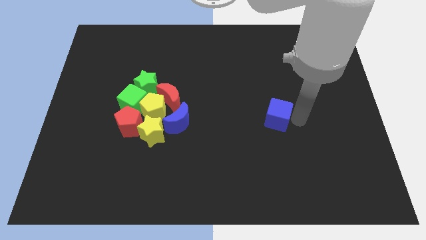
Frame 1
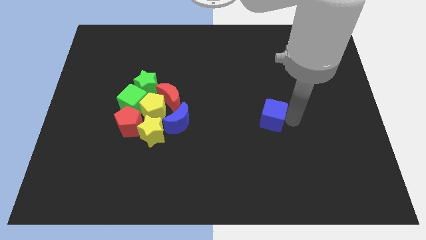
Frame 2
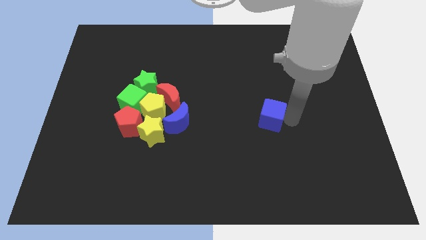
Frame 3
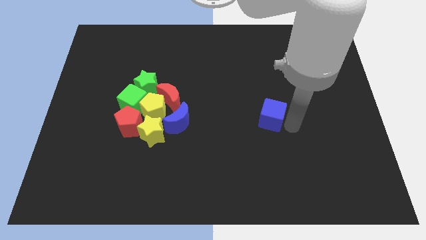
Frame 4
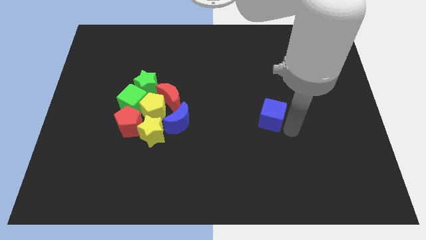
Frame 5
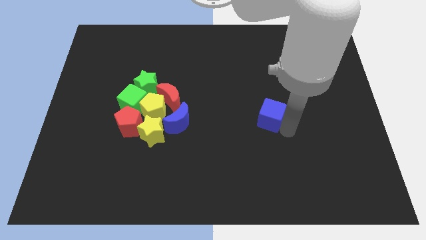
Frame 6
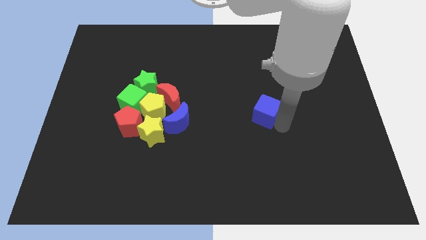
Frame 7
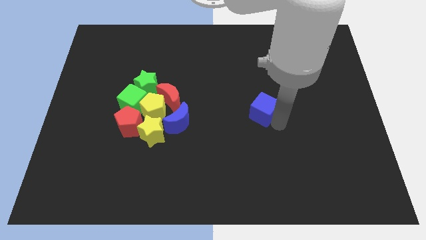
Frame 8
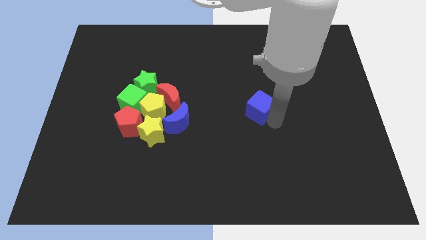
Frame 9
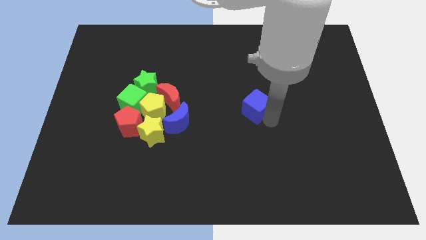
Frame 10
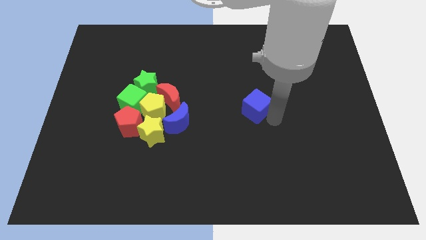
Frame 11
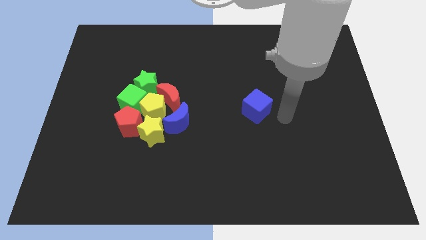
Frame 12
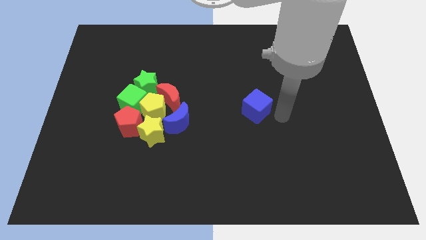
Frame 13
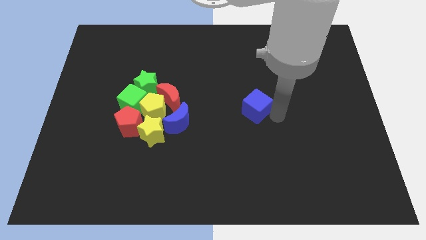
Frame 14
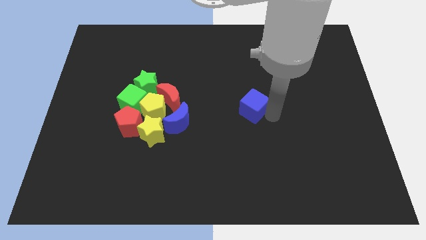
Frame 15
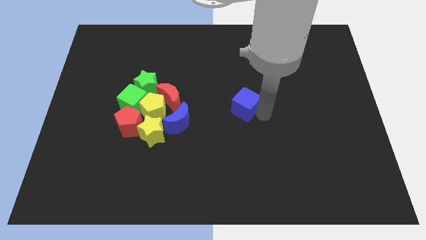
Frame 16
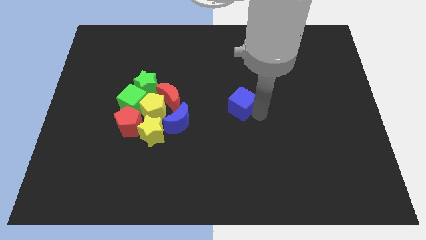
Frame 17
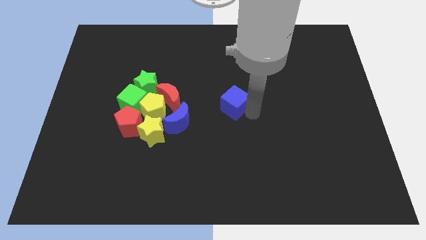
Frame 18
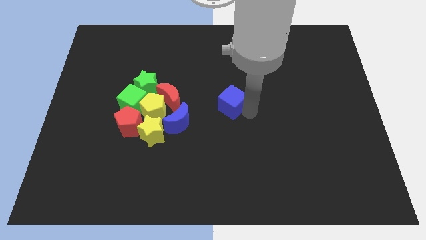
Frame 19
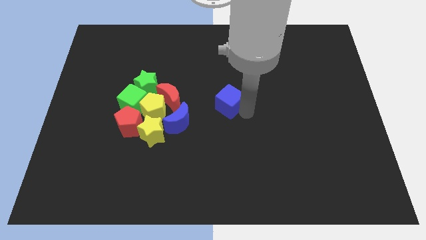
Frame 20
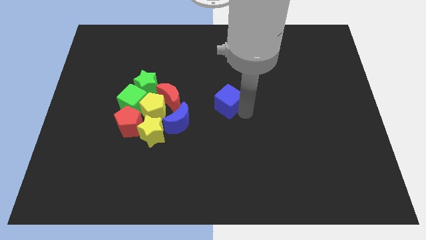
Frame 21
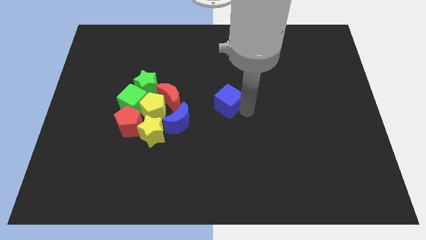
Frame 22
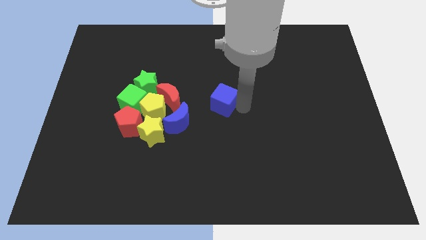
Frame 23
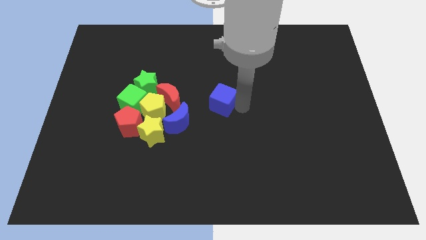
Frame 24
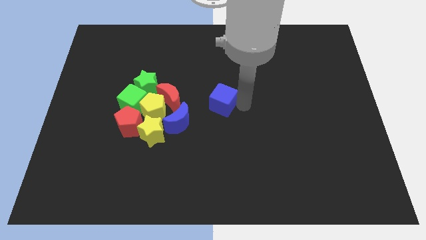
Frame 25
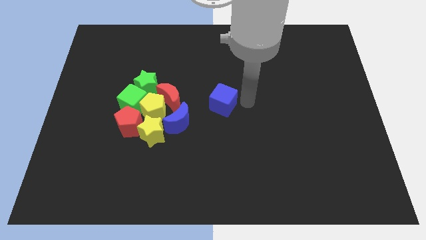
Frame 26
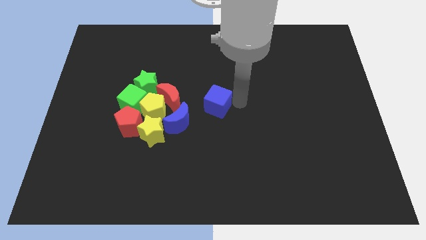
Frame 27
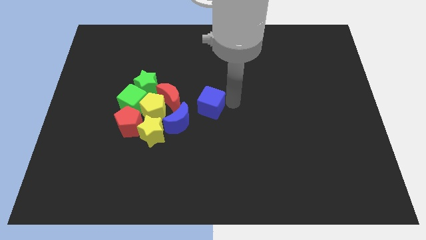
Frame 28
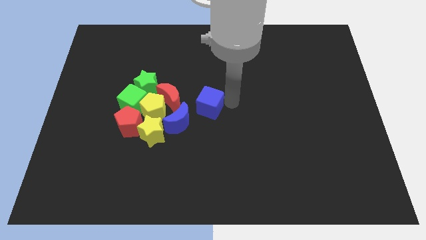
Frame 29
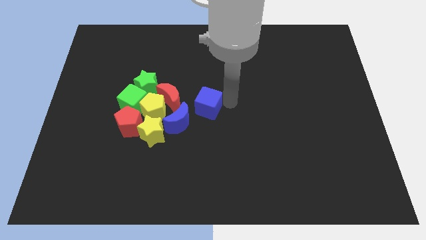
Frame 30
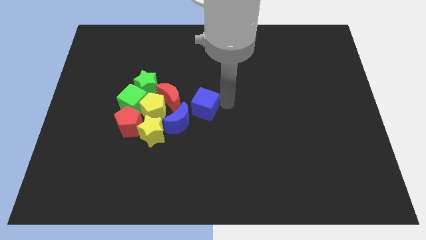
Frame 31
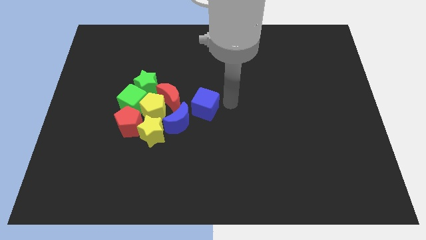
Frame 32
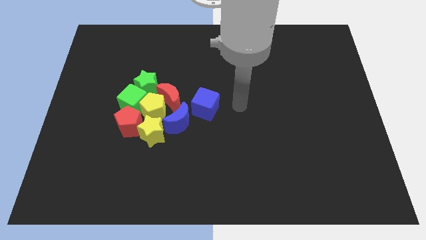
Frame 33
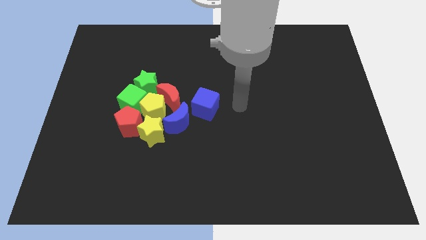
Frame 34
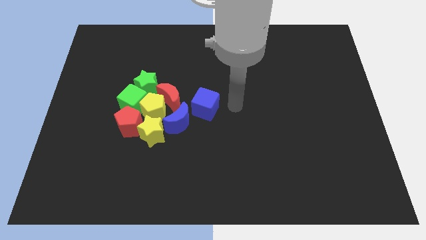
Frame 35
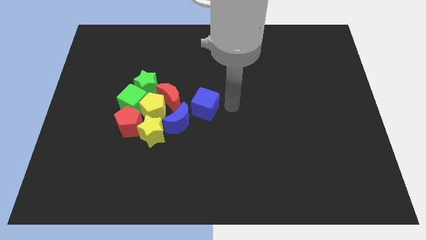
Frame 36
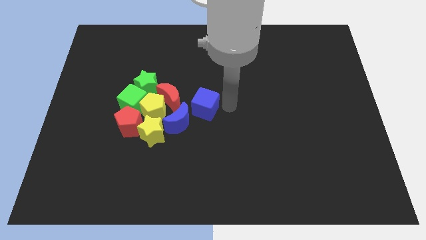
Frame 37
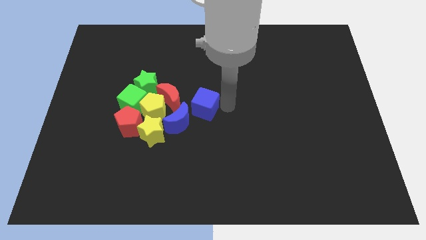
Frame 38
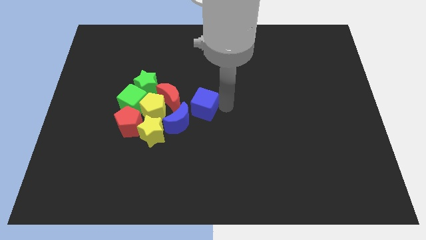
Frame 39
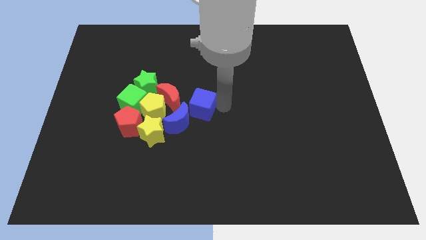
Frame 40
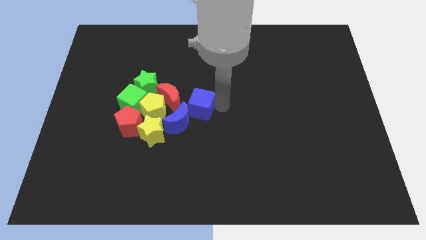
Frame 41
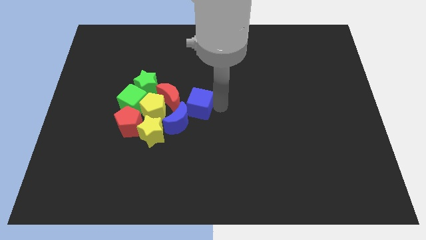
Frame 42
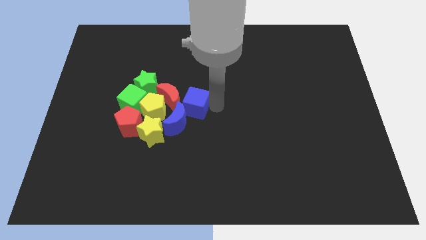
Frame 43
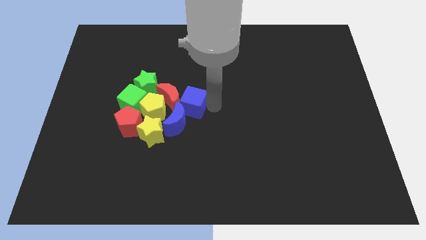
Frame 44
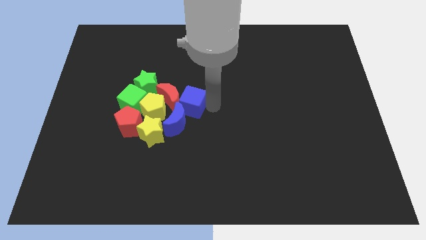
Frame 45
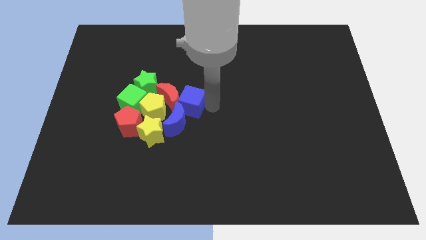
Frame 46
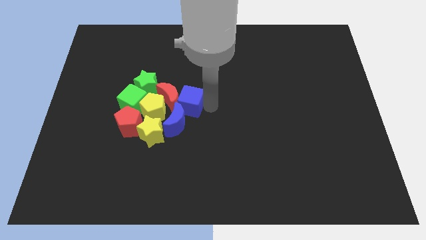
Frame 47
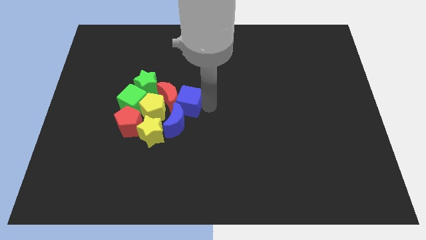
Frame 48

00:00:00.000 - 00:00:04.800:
push the blue cube into the group of blocks

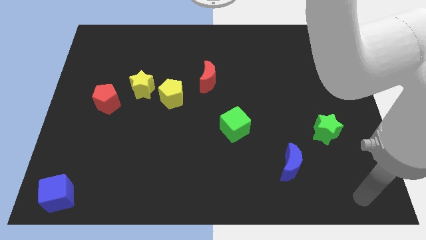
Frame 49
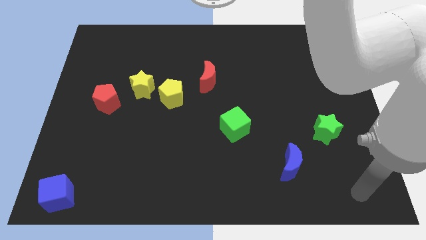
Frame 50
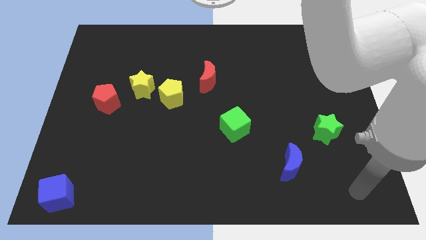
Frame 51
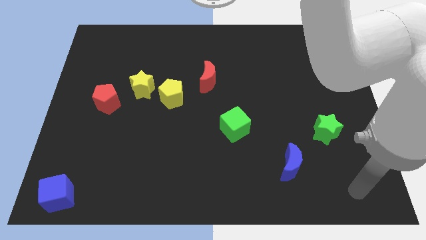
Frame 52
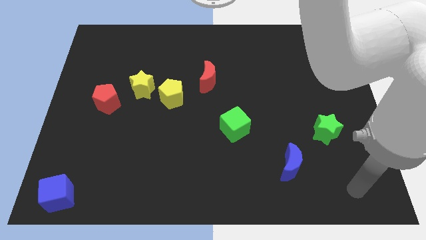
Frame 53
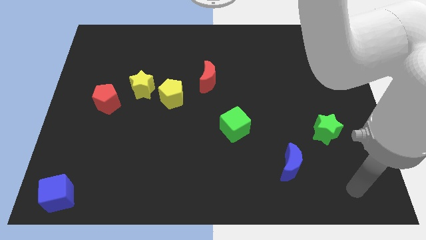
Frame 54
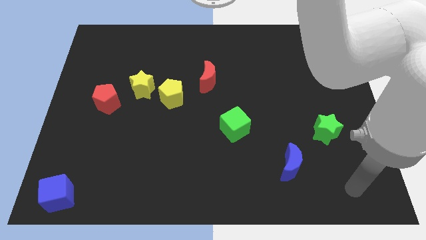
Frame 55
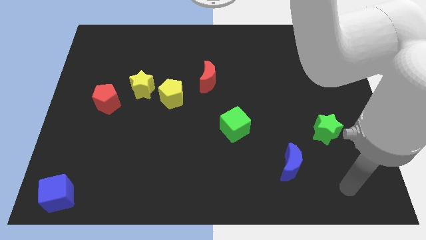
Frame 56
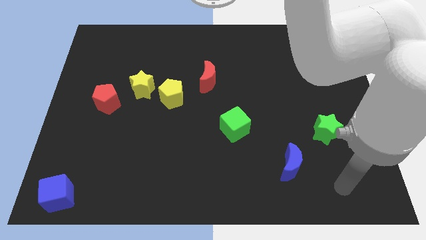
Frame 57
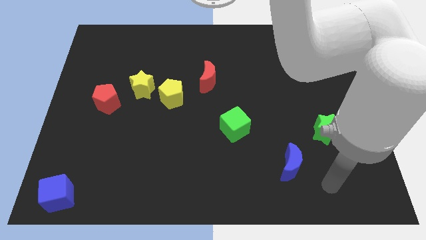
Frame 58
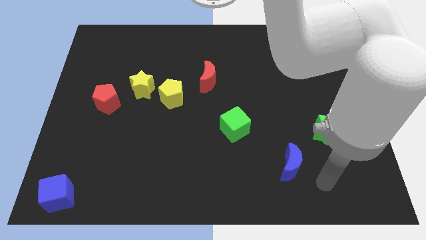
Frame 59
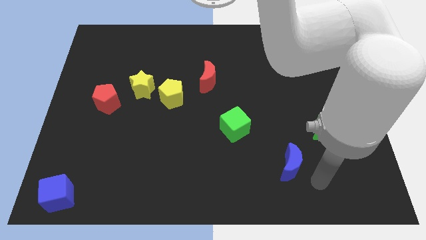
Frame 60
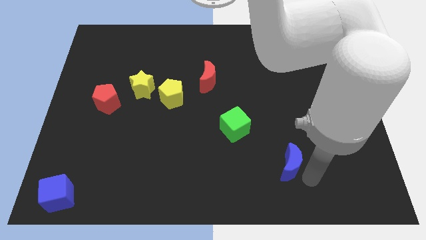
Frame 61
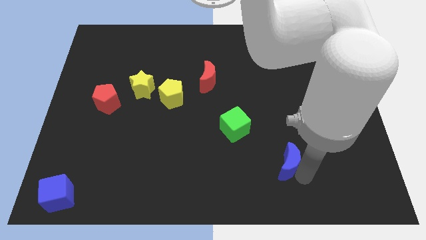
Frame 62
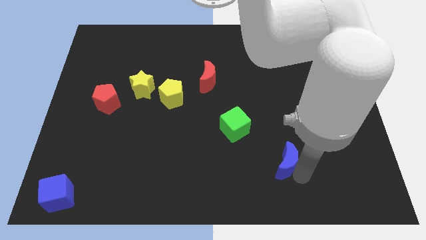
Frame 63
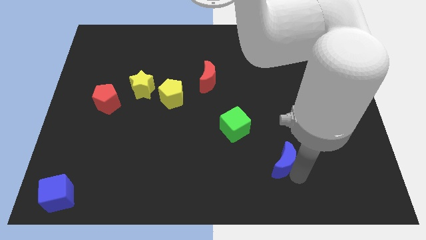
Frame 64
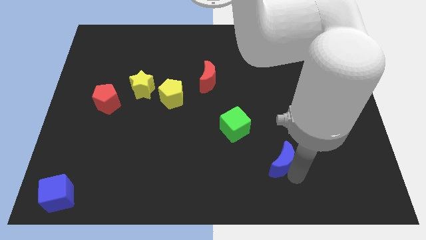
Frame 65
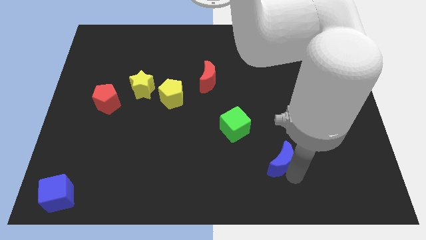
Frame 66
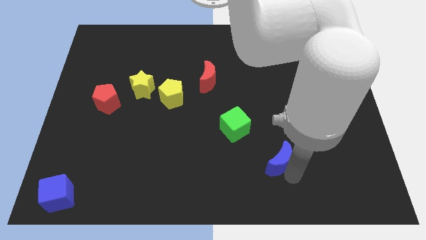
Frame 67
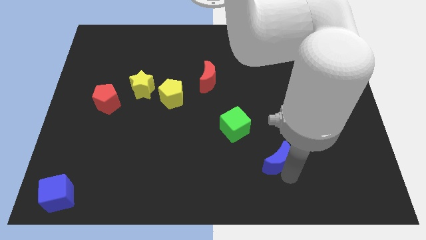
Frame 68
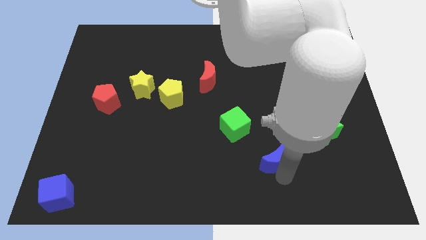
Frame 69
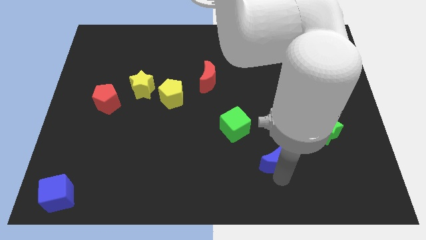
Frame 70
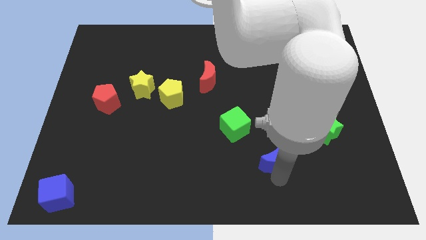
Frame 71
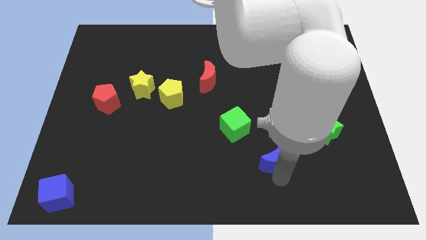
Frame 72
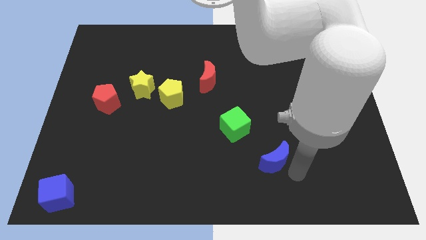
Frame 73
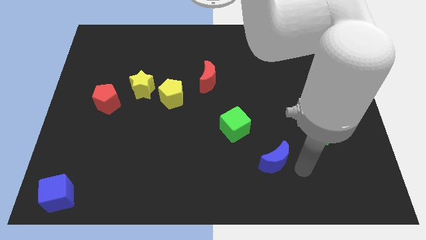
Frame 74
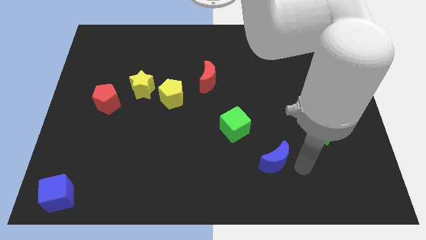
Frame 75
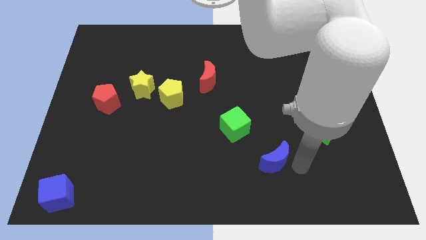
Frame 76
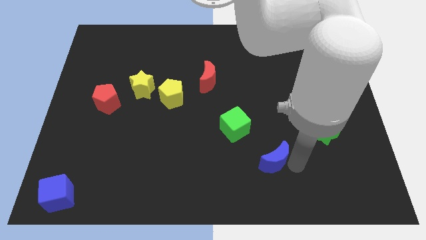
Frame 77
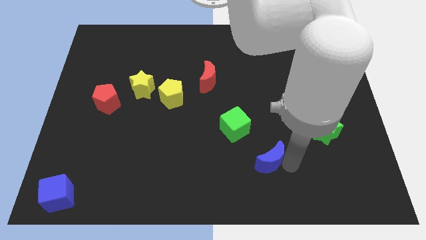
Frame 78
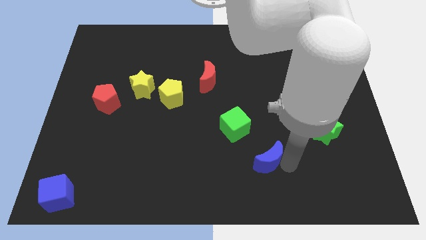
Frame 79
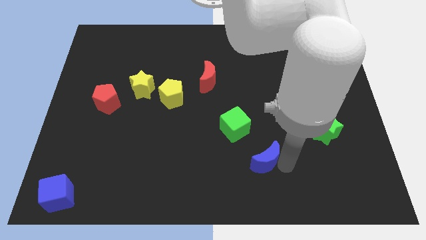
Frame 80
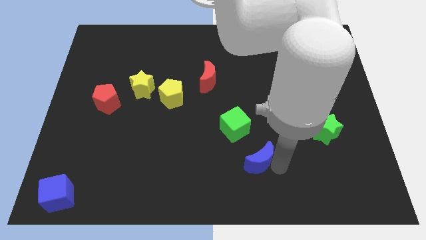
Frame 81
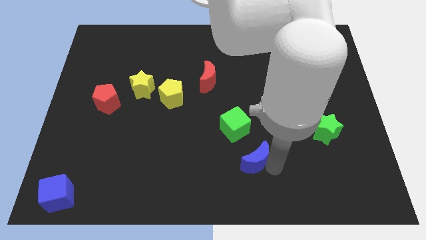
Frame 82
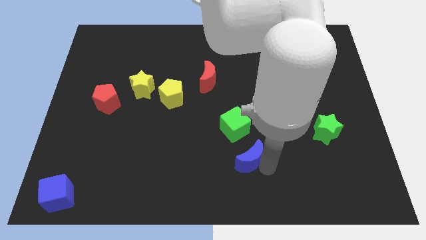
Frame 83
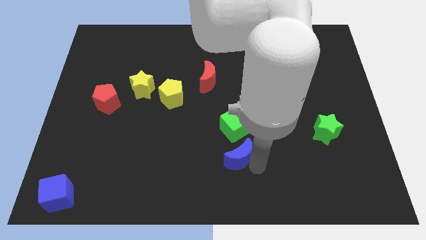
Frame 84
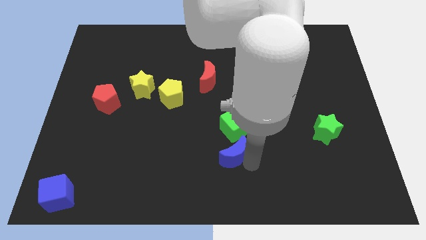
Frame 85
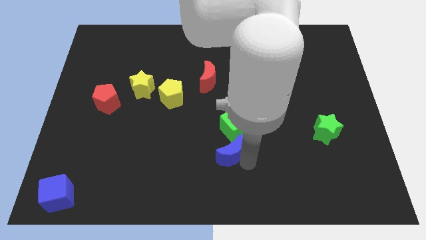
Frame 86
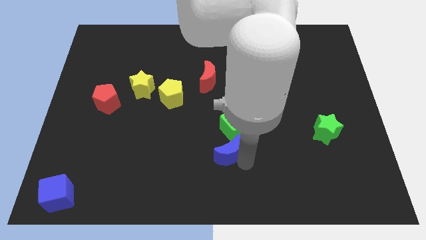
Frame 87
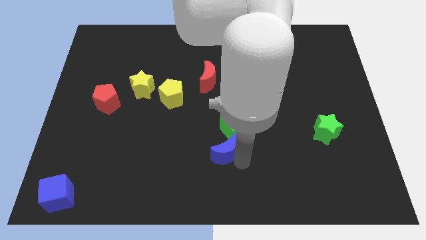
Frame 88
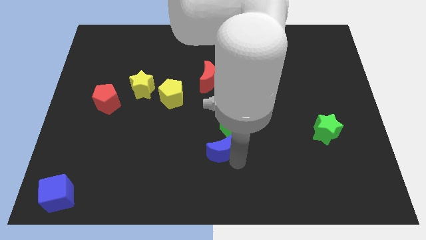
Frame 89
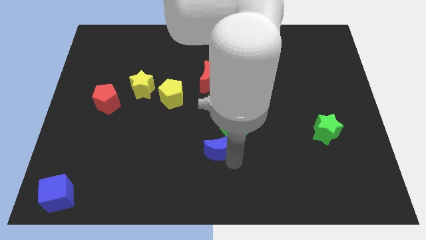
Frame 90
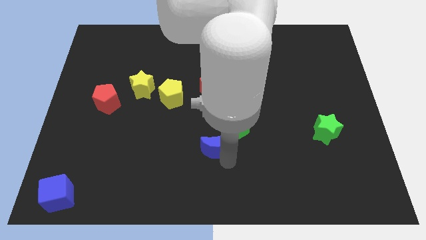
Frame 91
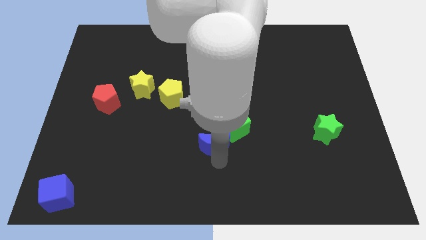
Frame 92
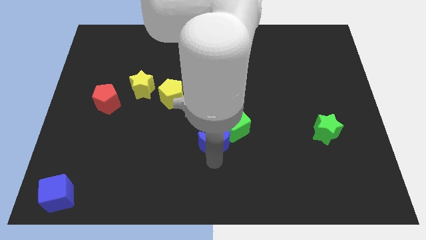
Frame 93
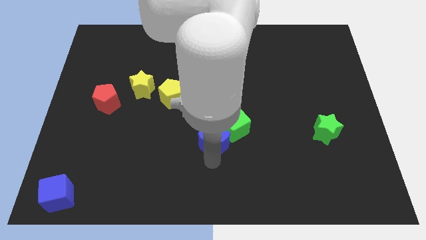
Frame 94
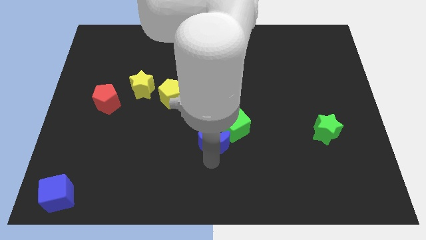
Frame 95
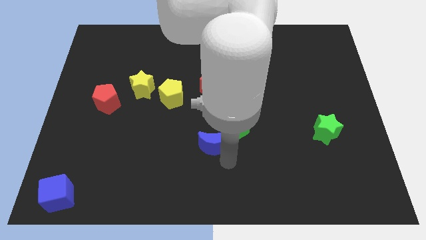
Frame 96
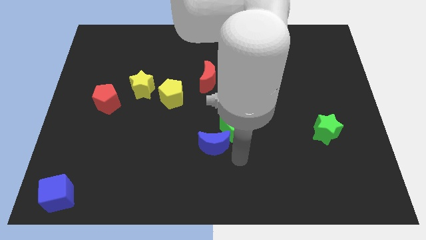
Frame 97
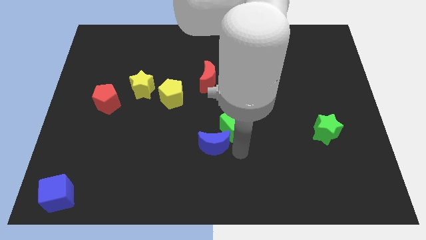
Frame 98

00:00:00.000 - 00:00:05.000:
place the blue moon near the green cube
